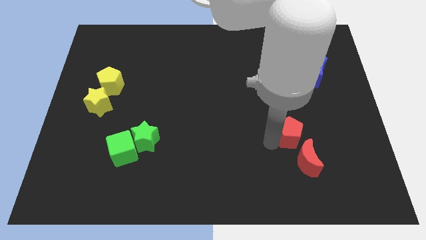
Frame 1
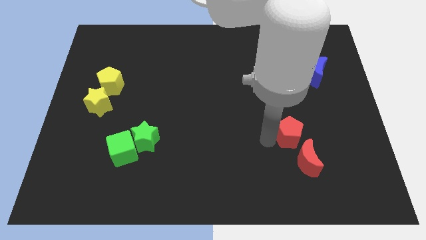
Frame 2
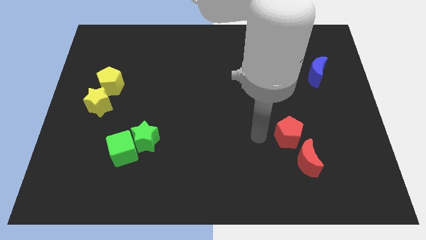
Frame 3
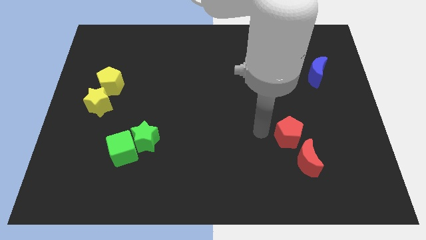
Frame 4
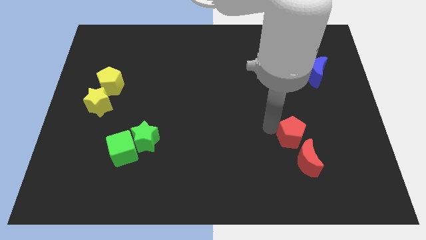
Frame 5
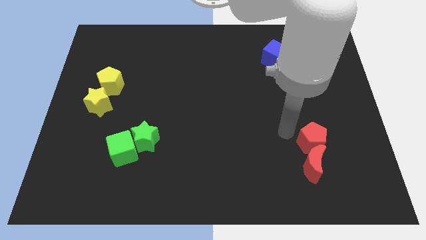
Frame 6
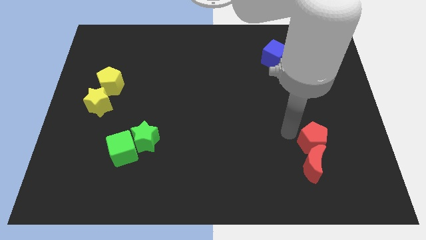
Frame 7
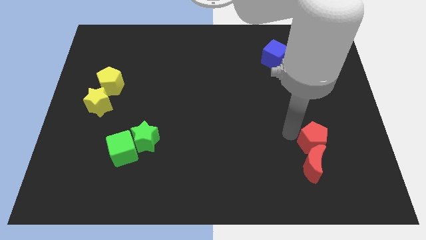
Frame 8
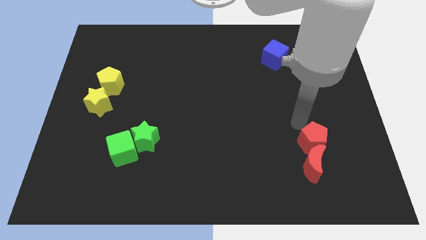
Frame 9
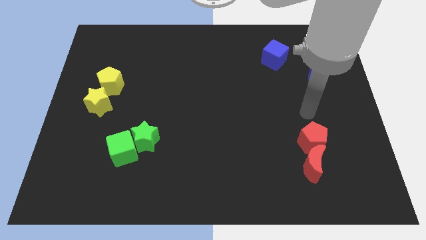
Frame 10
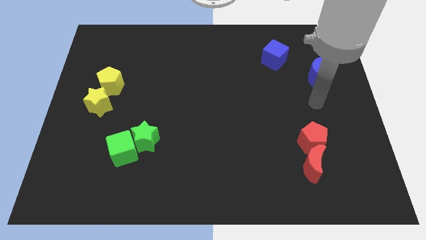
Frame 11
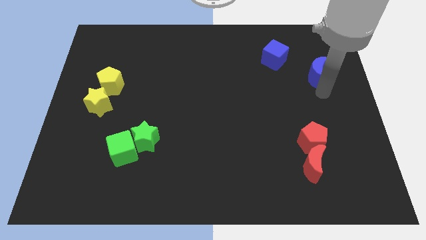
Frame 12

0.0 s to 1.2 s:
move your arm away from red pentagon

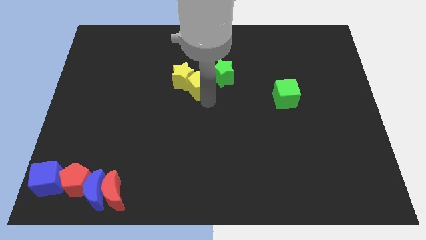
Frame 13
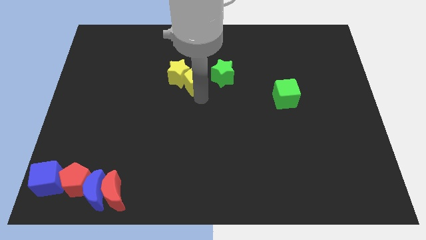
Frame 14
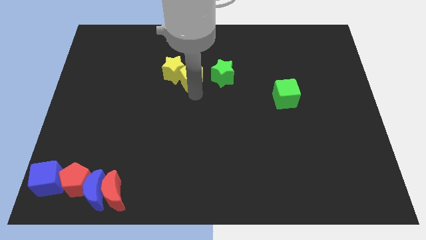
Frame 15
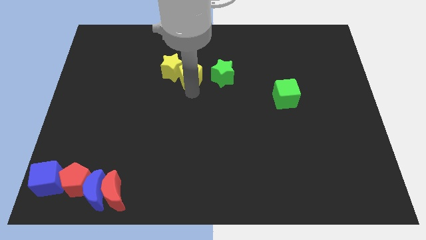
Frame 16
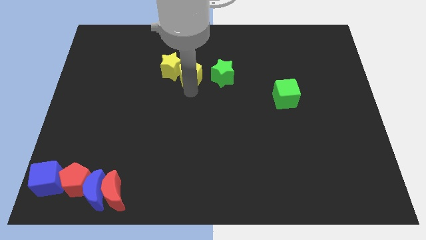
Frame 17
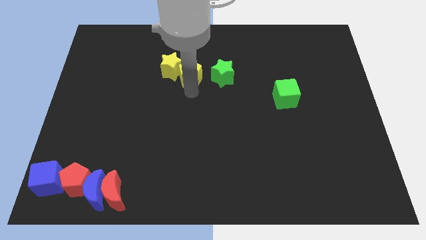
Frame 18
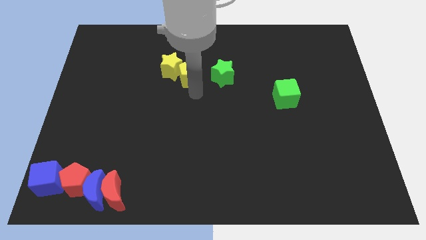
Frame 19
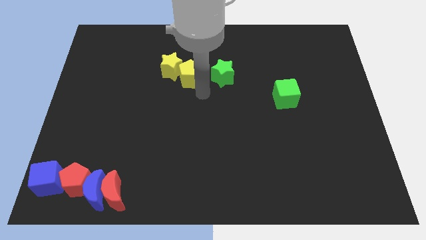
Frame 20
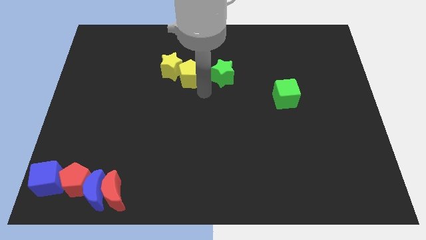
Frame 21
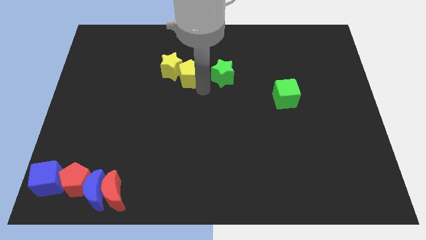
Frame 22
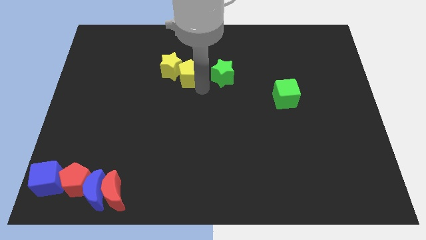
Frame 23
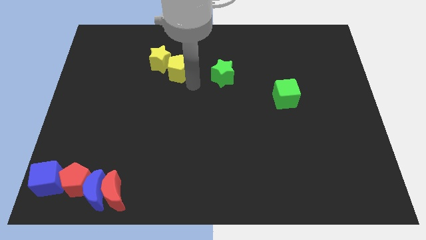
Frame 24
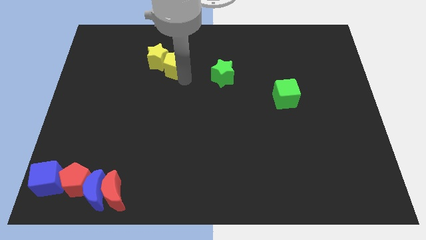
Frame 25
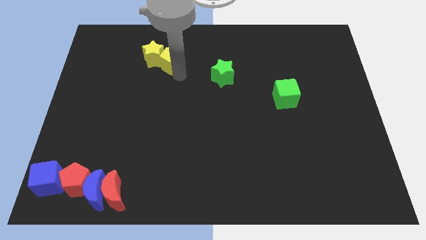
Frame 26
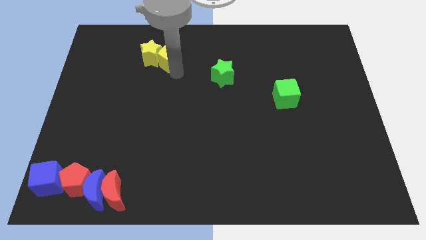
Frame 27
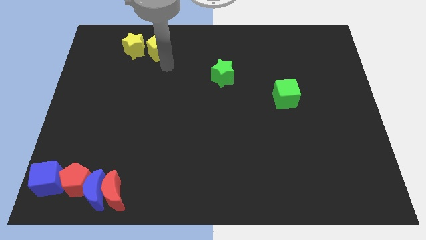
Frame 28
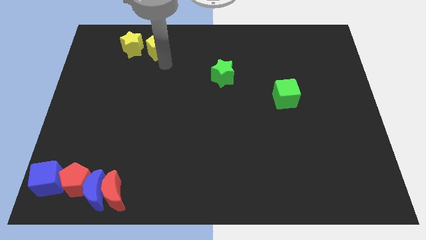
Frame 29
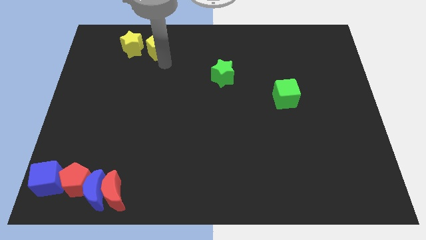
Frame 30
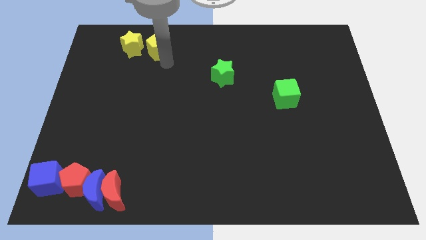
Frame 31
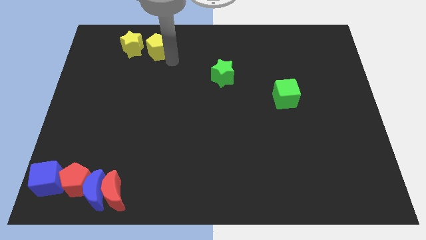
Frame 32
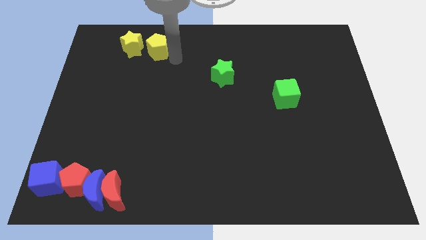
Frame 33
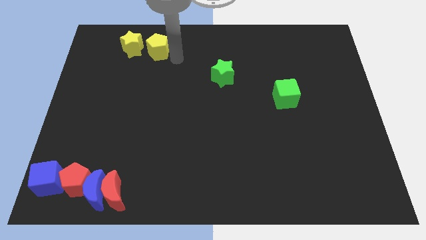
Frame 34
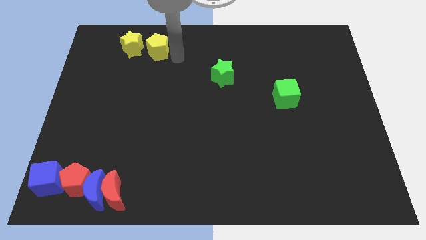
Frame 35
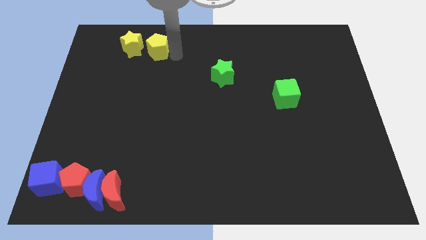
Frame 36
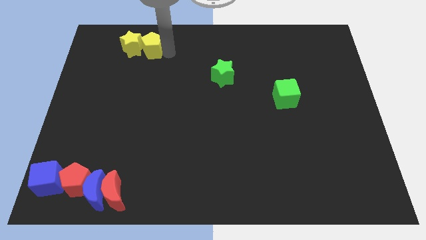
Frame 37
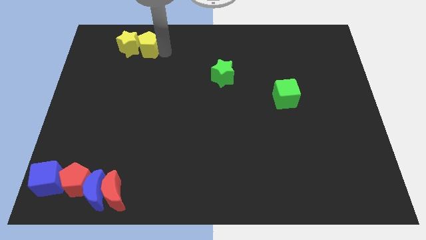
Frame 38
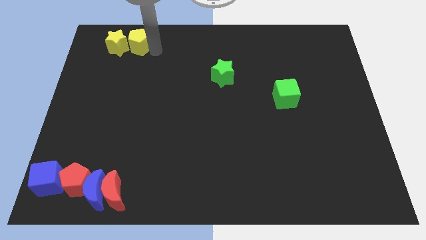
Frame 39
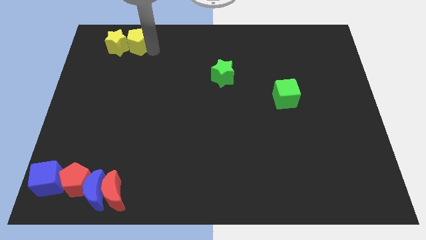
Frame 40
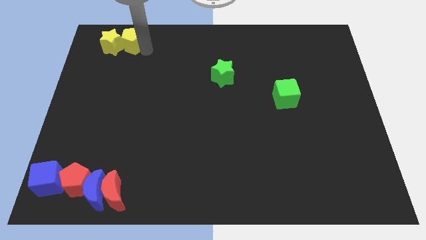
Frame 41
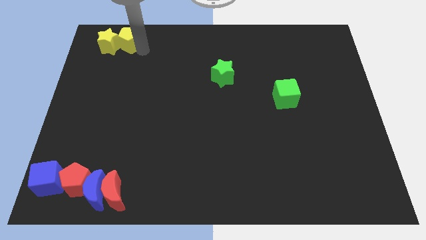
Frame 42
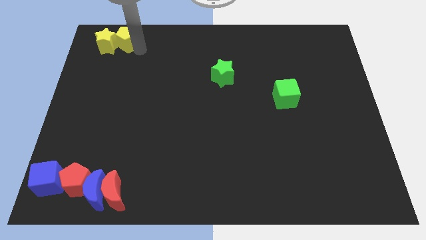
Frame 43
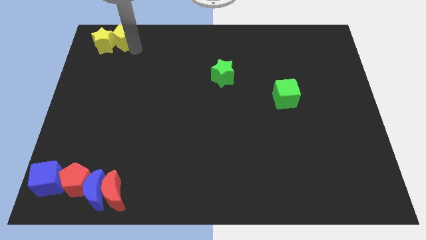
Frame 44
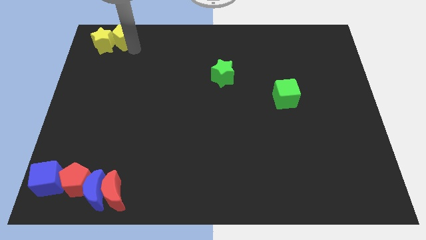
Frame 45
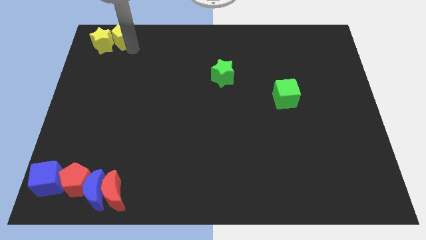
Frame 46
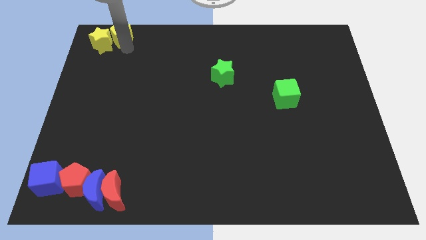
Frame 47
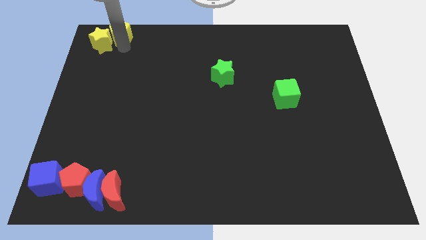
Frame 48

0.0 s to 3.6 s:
place yellow blocks at the top left corner of the board

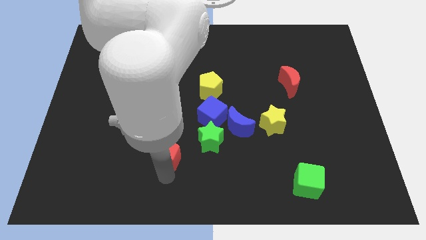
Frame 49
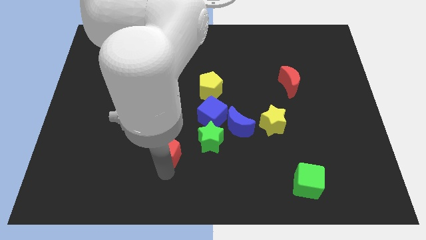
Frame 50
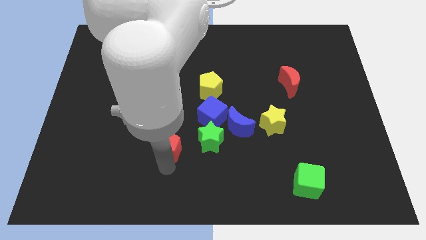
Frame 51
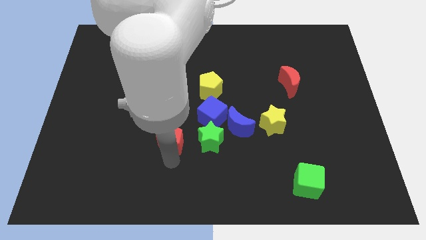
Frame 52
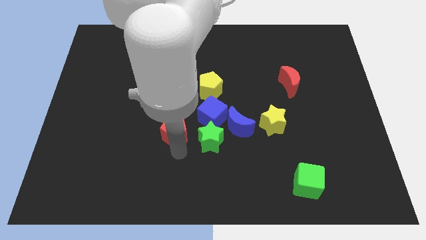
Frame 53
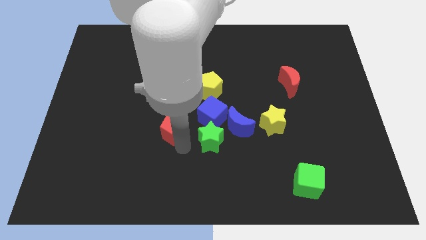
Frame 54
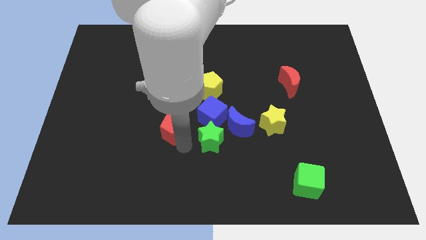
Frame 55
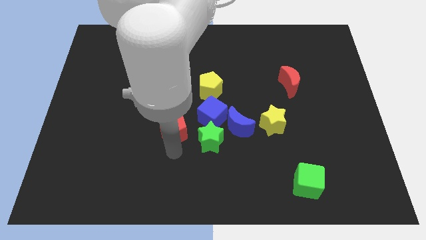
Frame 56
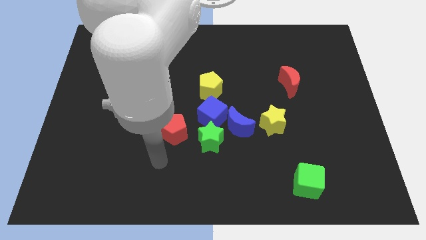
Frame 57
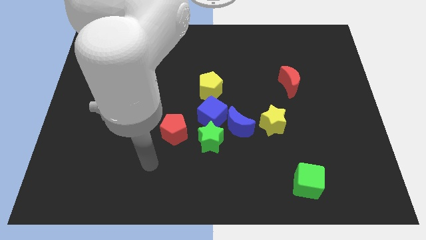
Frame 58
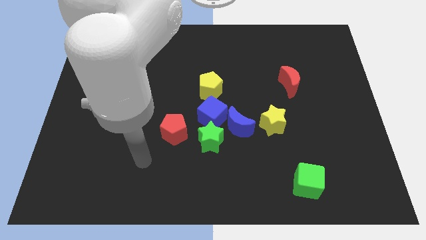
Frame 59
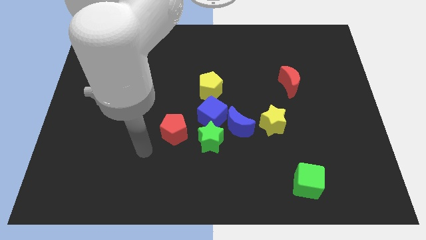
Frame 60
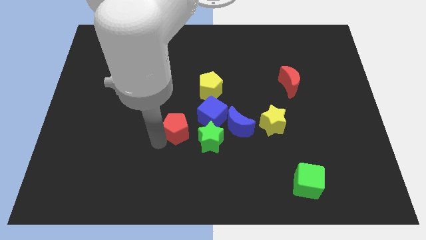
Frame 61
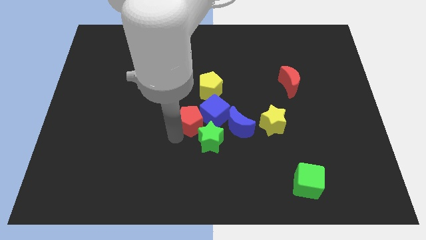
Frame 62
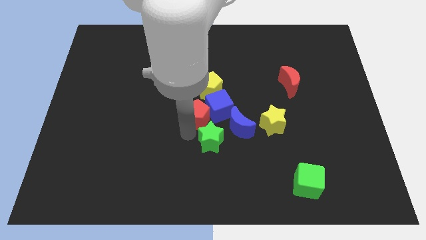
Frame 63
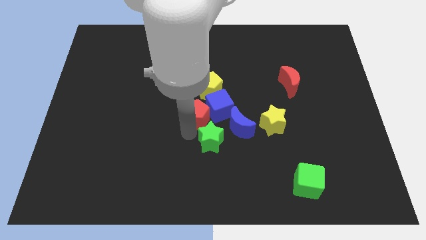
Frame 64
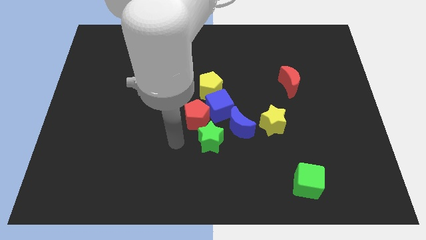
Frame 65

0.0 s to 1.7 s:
place the red pentagon to the left side of blue cube

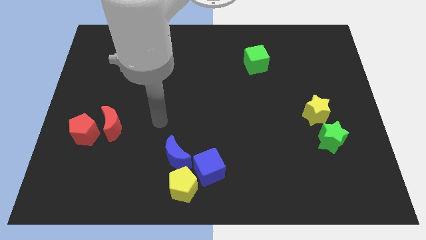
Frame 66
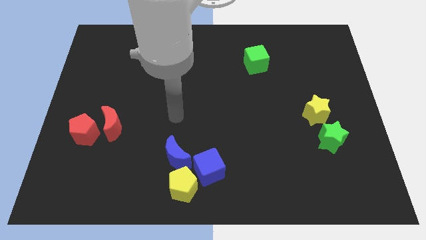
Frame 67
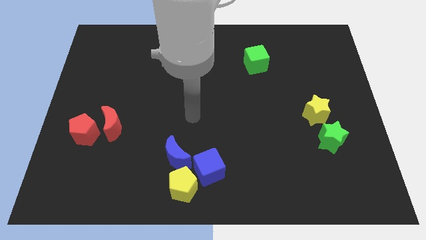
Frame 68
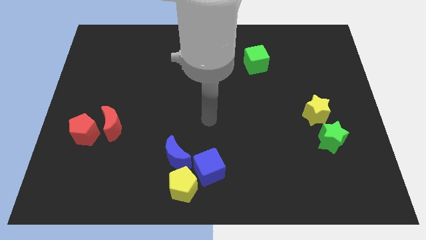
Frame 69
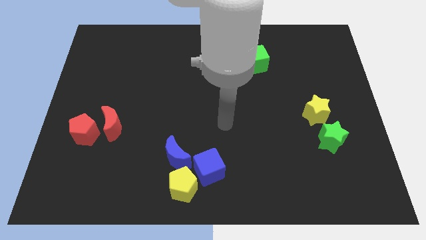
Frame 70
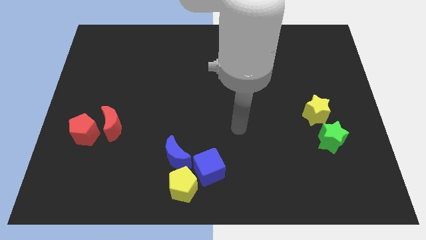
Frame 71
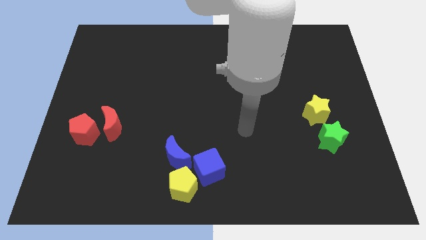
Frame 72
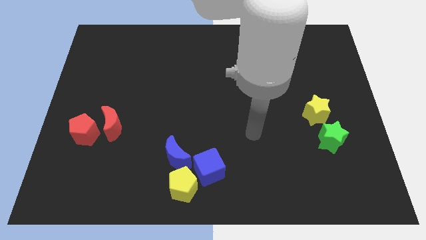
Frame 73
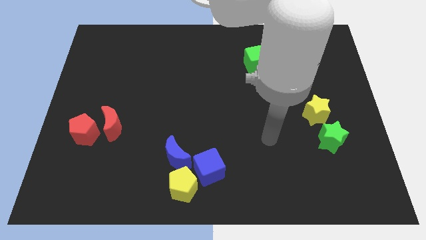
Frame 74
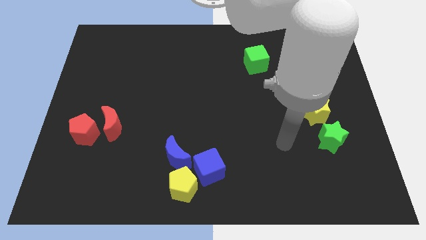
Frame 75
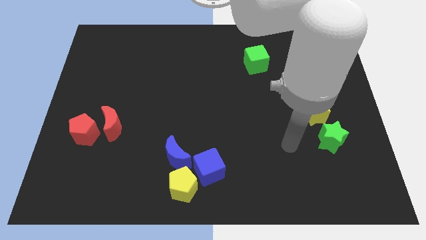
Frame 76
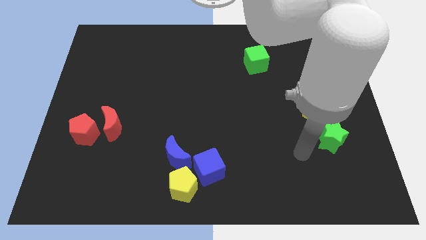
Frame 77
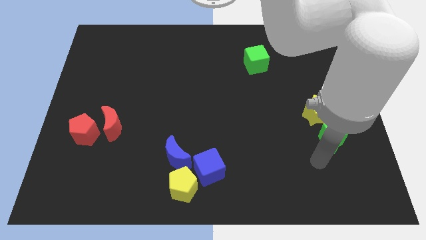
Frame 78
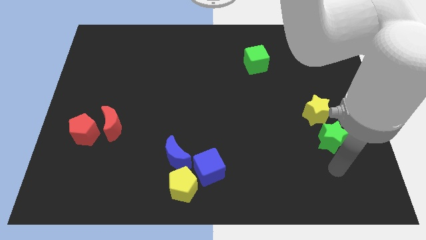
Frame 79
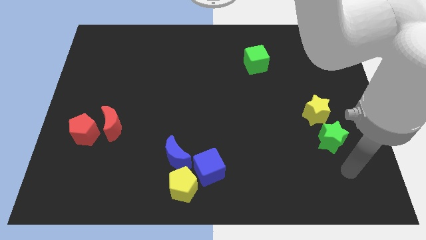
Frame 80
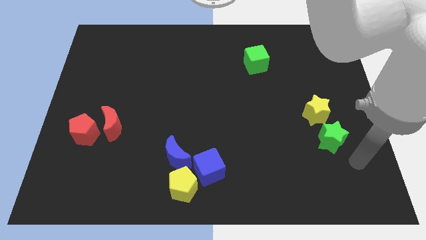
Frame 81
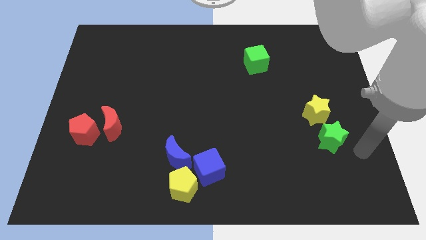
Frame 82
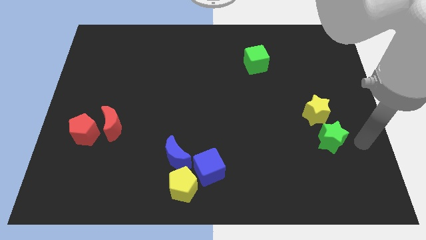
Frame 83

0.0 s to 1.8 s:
go and place your arm at the right of the green star

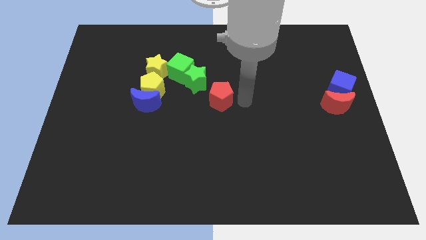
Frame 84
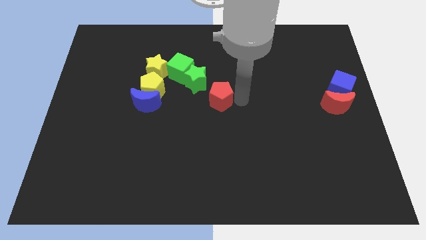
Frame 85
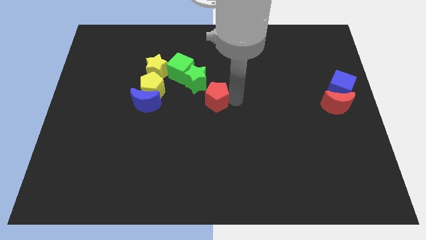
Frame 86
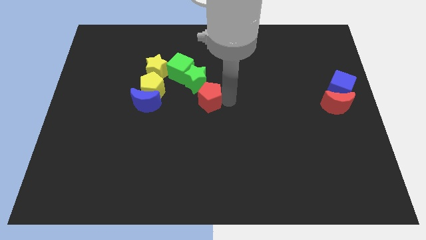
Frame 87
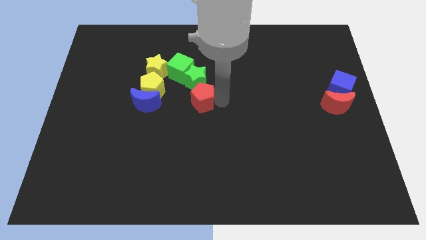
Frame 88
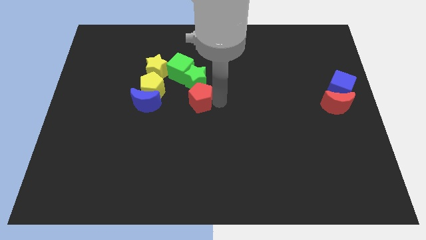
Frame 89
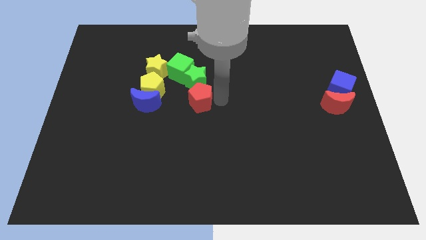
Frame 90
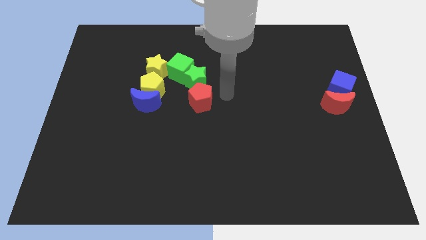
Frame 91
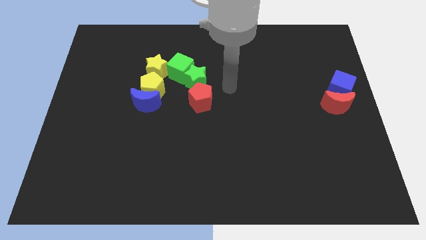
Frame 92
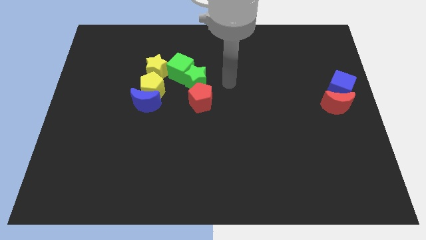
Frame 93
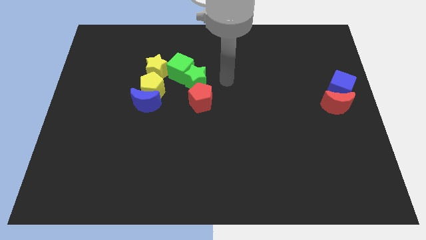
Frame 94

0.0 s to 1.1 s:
place the red pentagon below the green star
